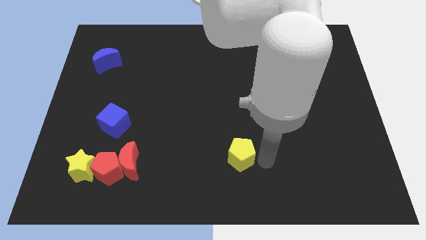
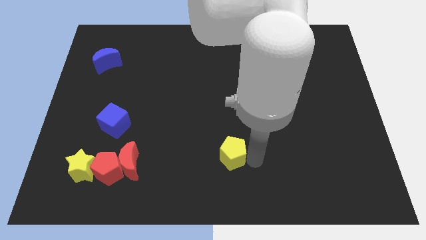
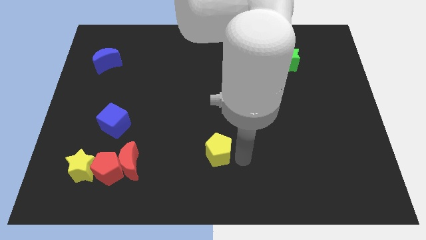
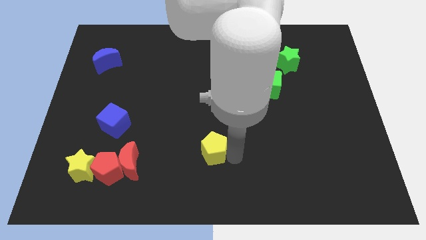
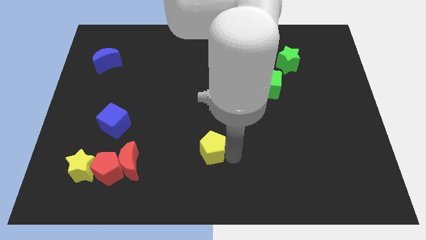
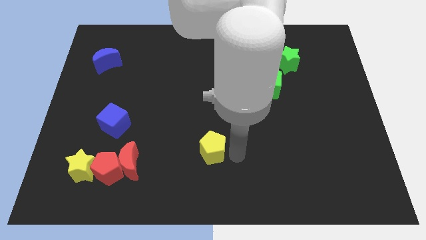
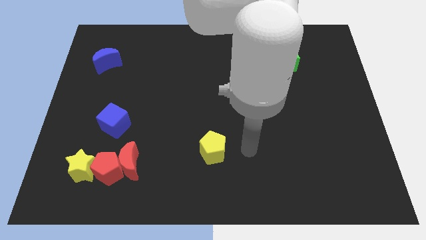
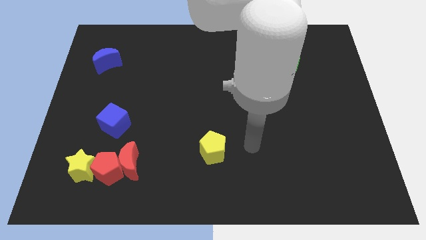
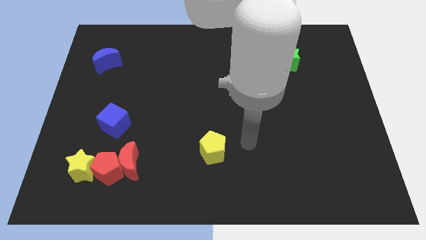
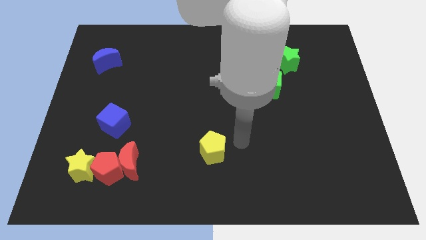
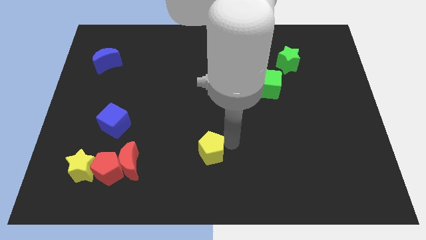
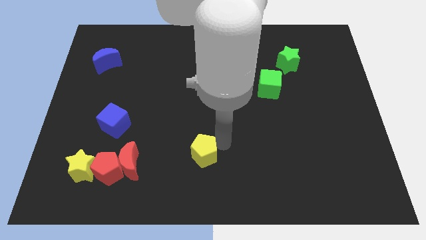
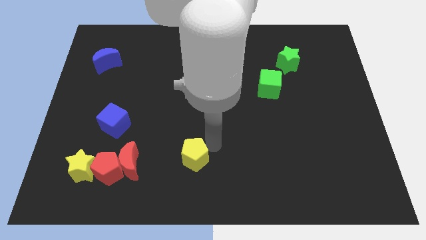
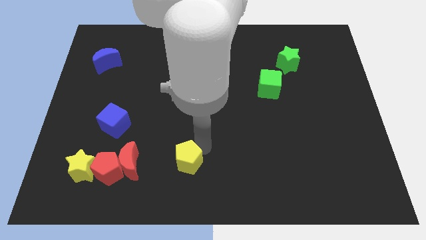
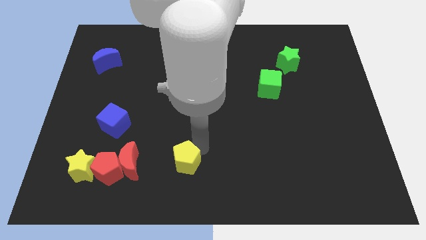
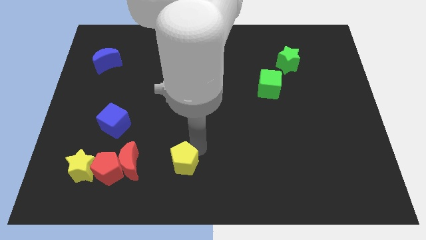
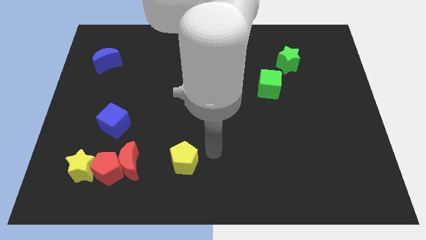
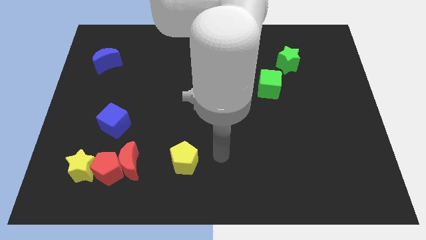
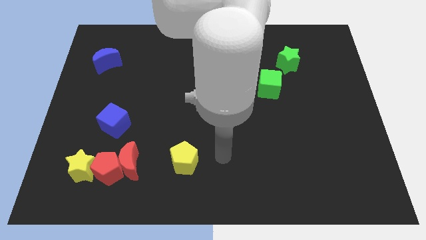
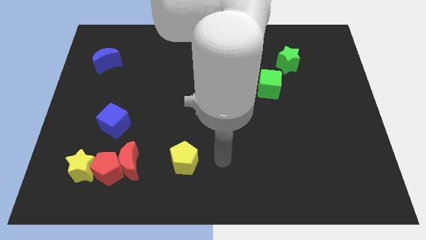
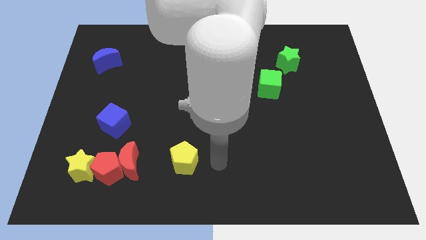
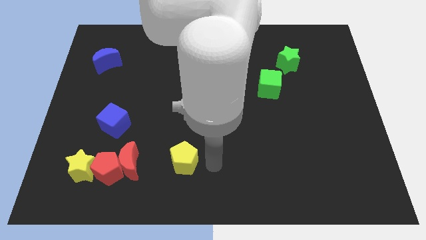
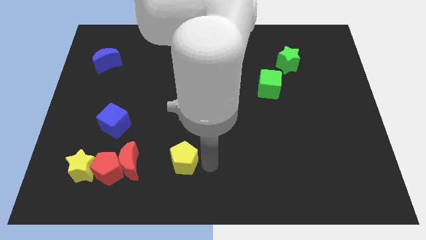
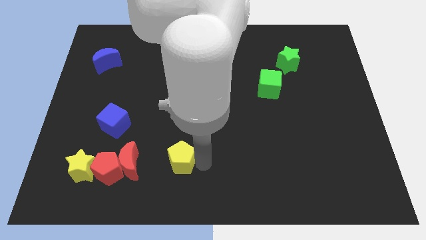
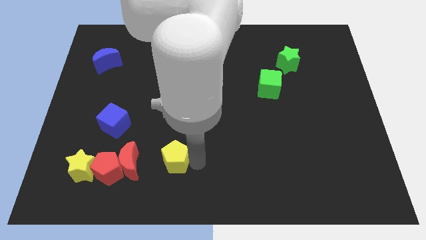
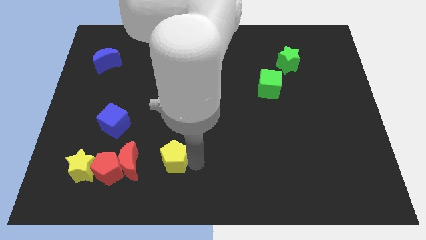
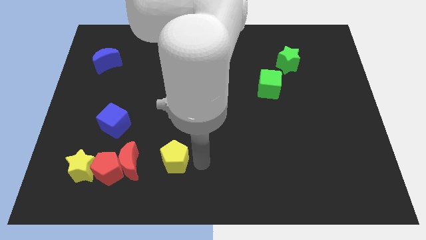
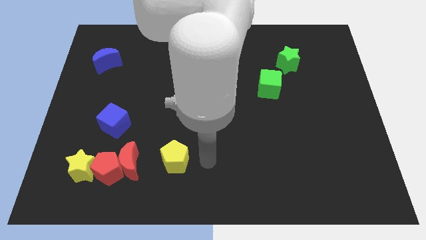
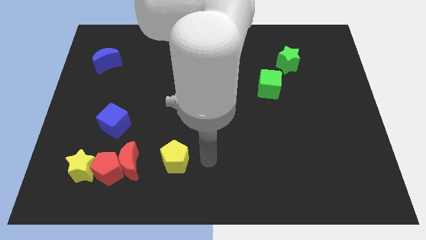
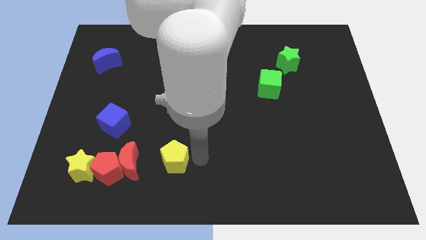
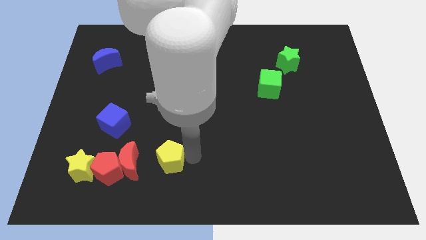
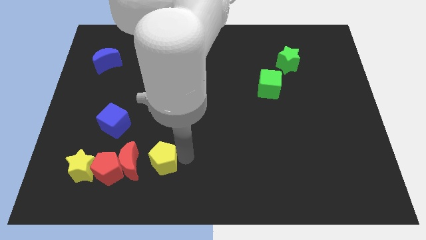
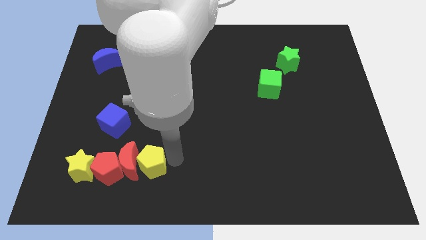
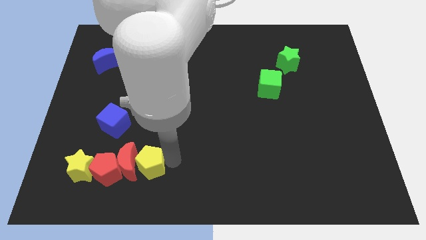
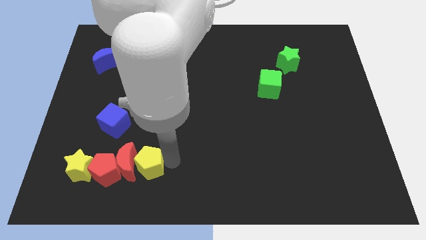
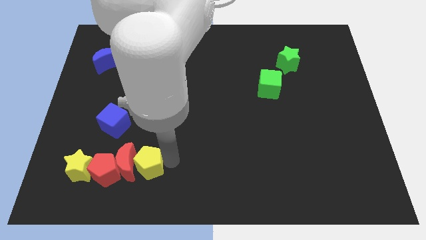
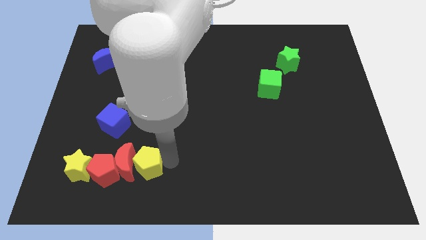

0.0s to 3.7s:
push the yellow pentagon into the red moon

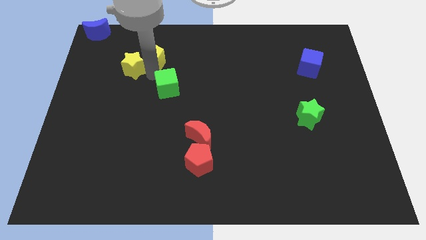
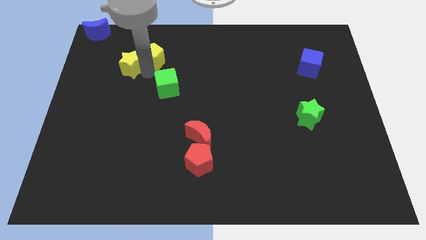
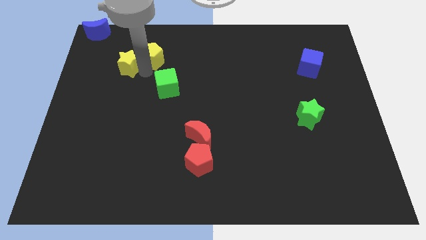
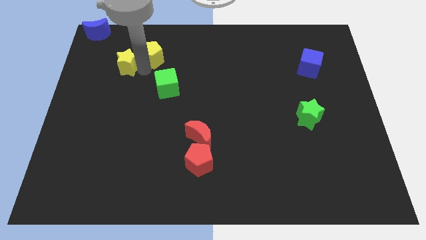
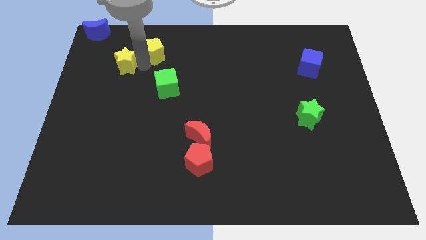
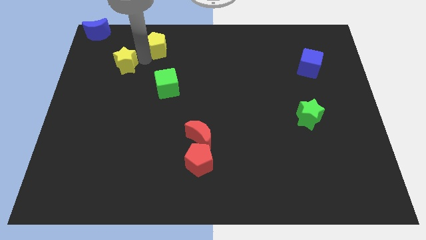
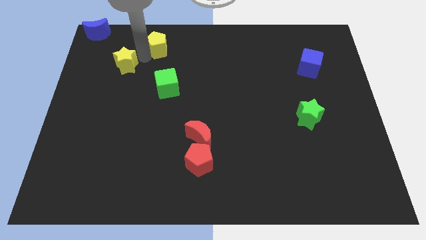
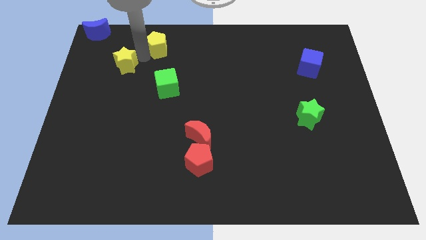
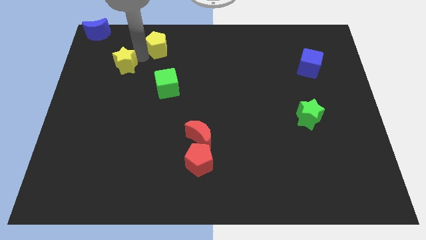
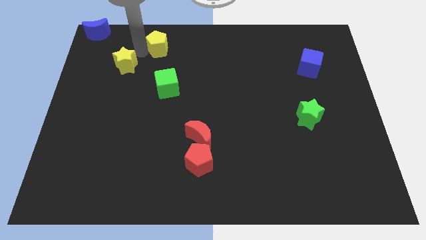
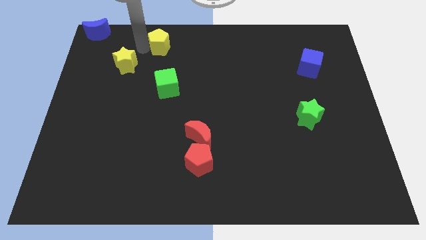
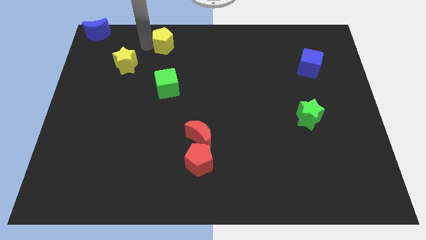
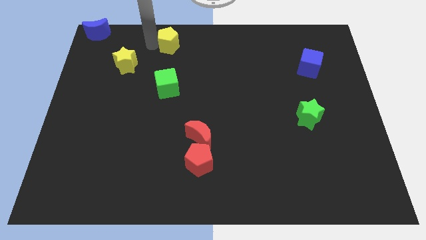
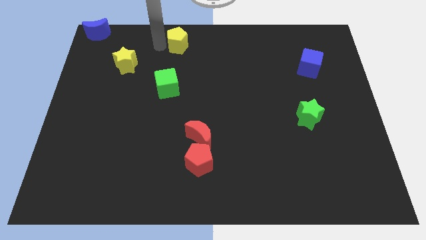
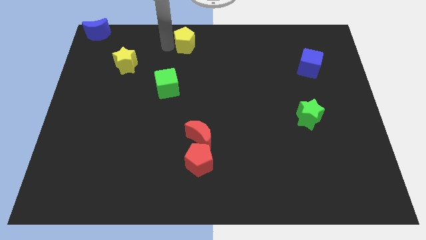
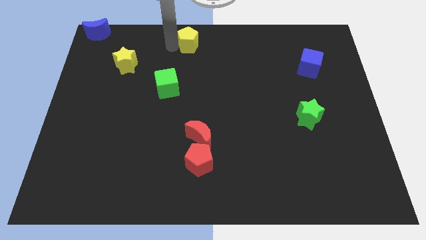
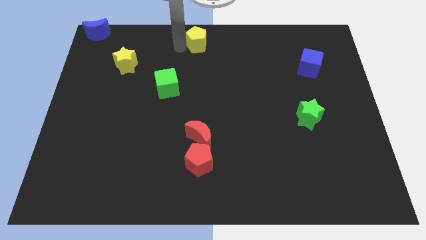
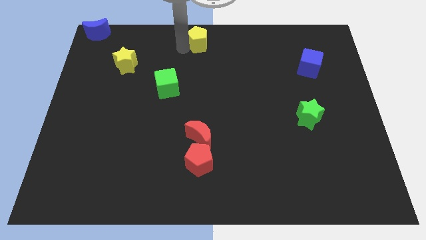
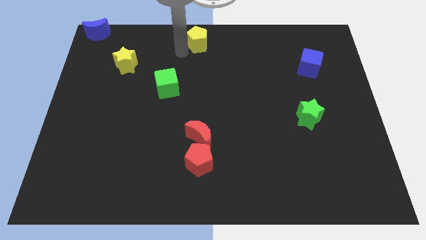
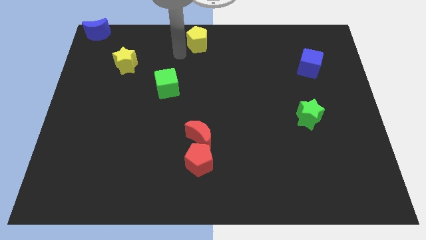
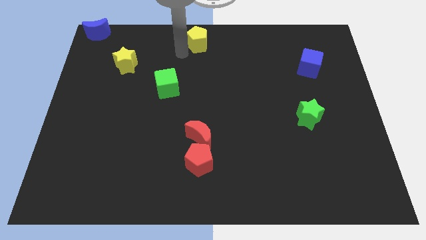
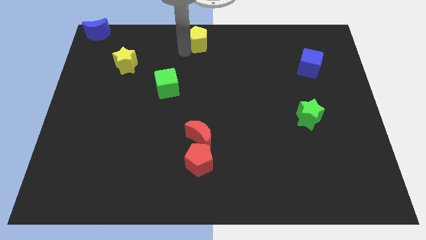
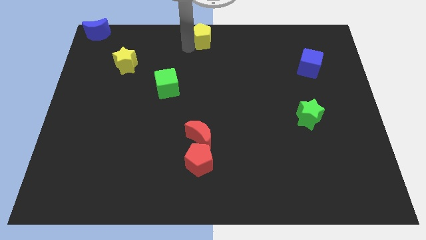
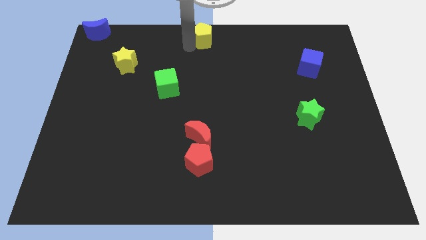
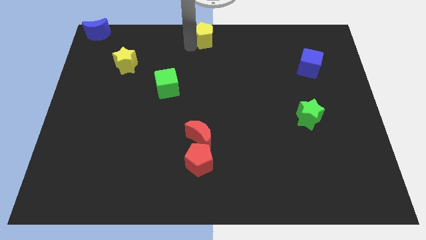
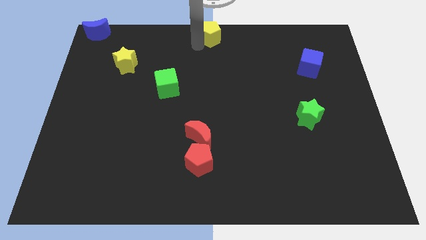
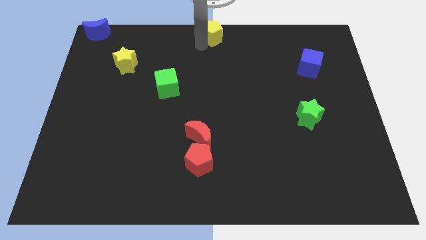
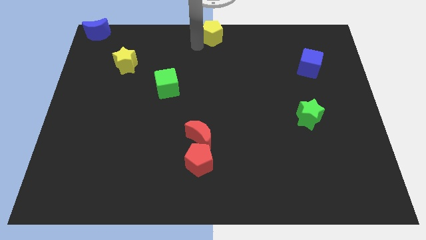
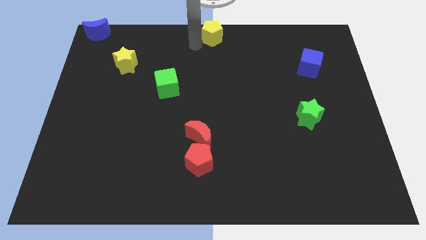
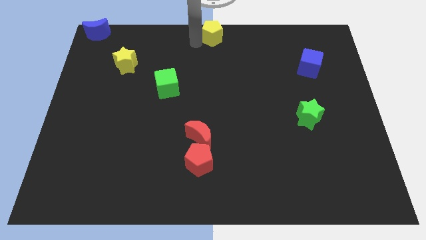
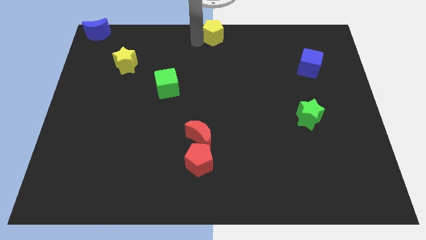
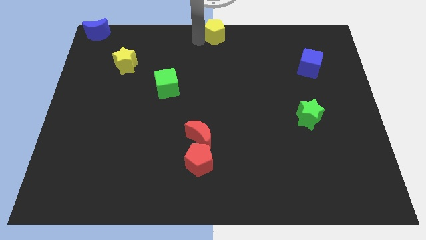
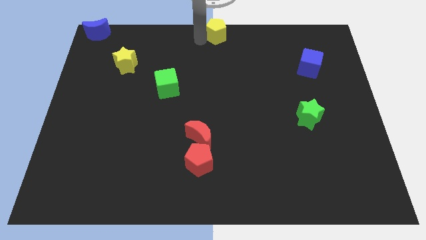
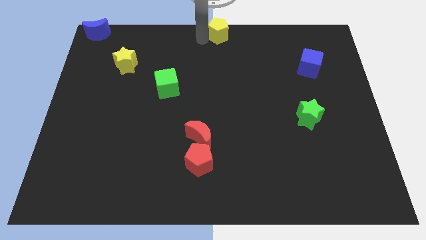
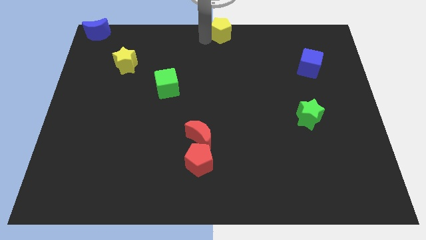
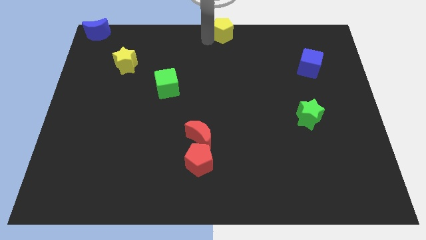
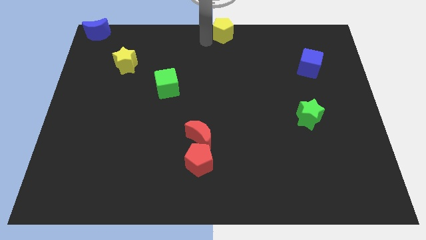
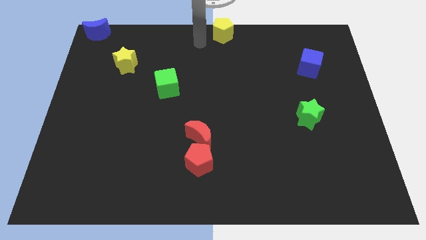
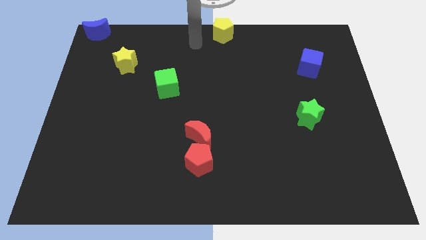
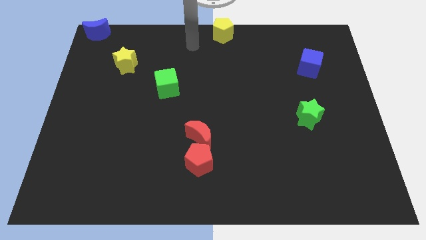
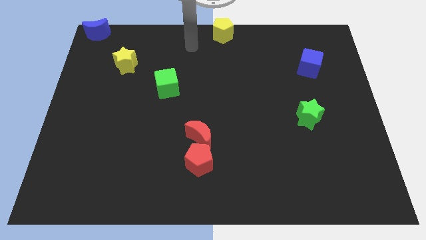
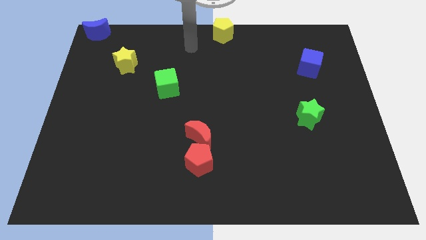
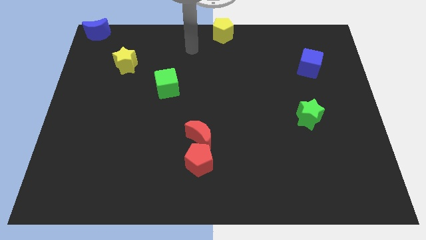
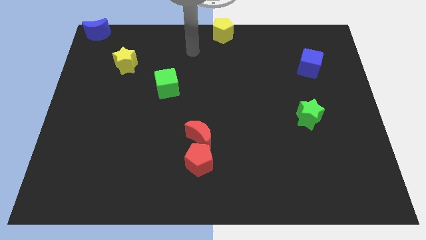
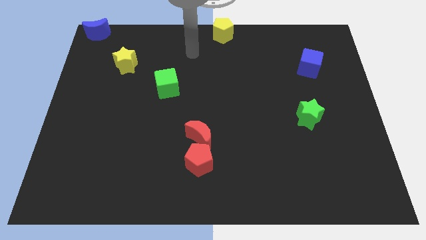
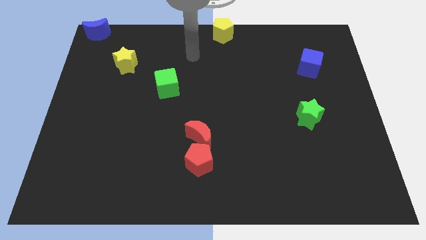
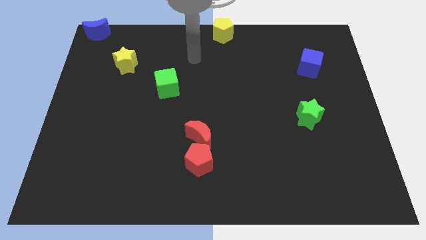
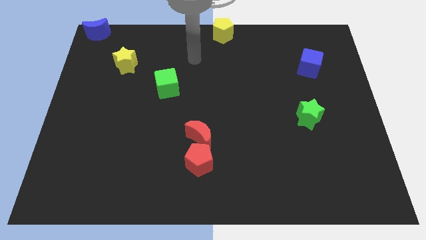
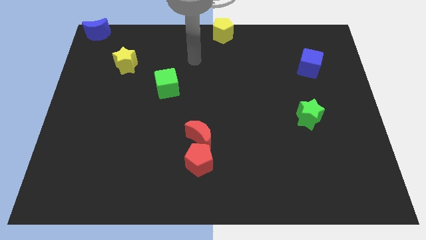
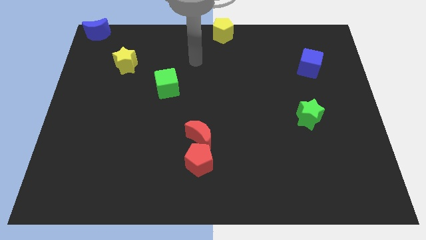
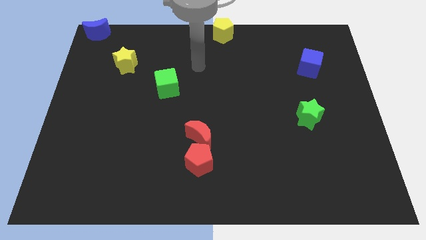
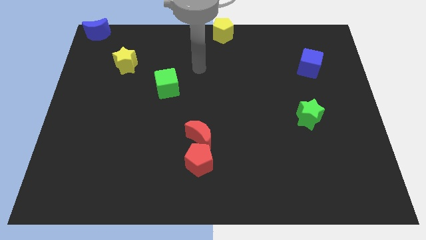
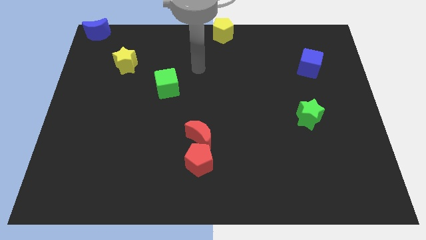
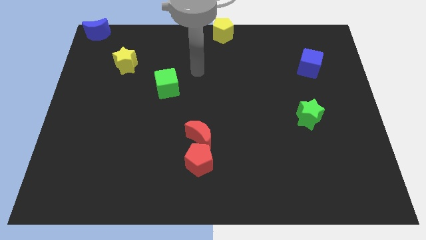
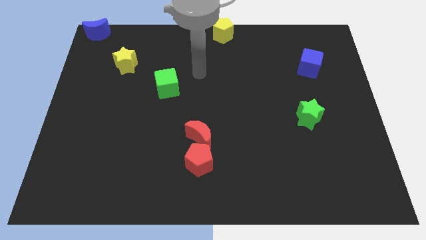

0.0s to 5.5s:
move the yellow pentagon towards the top center
